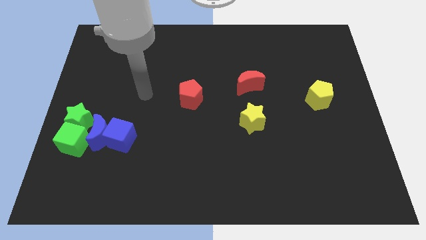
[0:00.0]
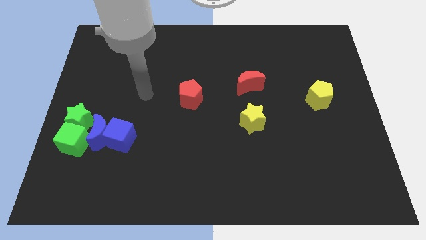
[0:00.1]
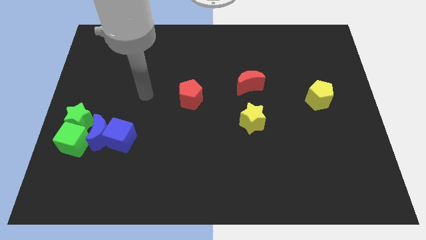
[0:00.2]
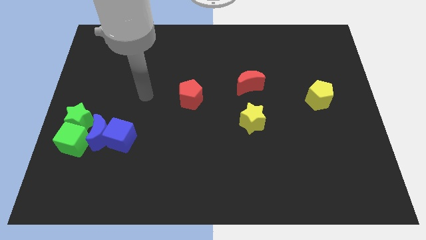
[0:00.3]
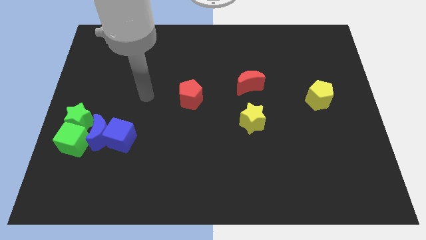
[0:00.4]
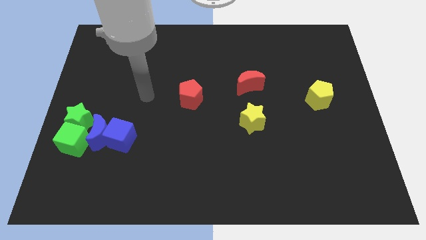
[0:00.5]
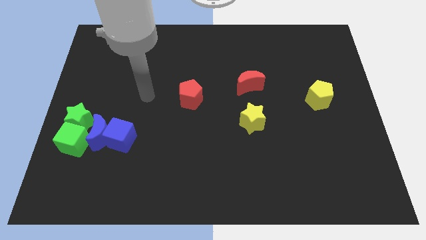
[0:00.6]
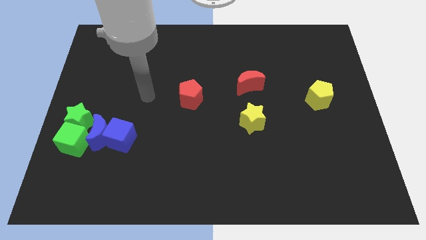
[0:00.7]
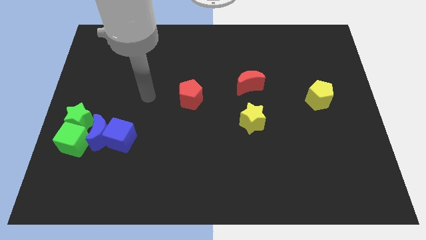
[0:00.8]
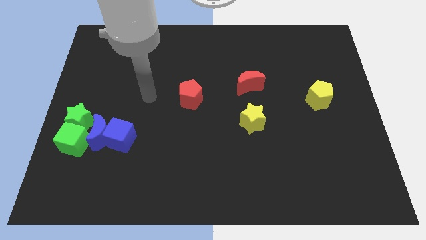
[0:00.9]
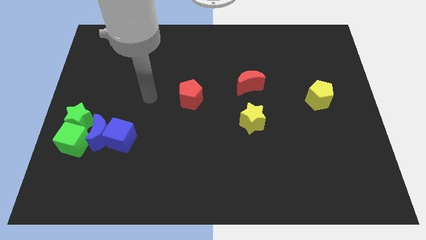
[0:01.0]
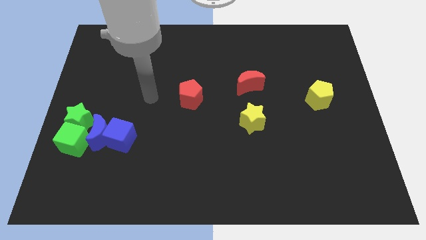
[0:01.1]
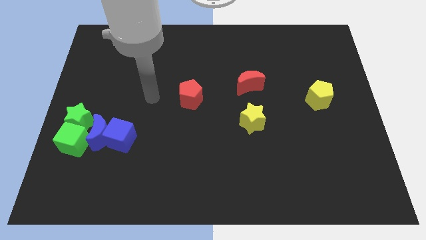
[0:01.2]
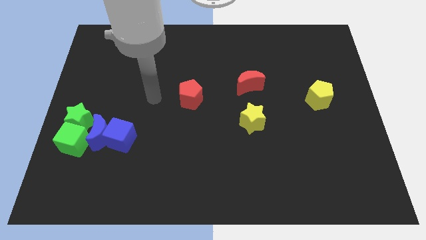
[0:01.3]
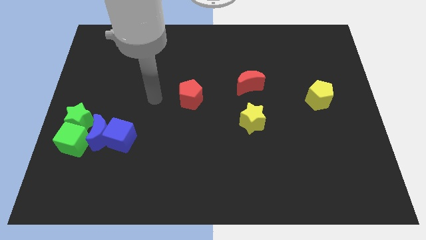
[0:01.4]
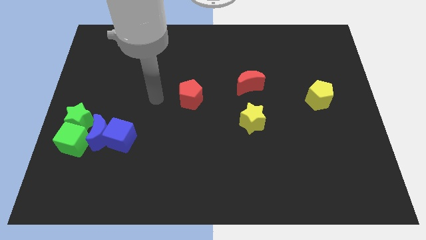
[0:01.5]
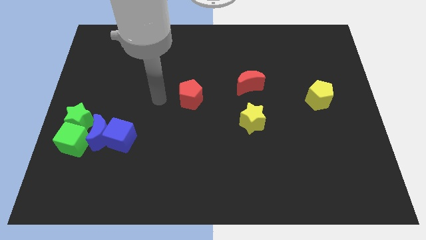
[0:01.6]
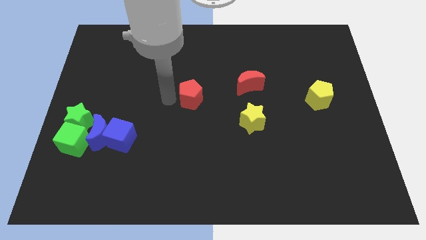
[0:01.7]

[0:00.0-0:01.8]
move your arm towards the left of the red pentagon

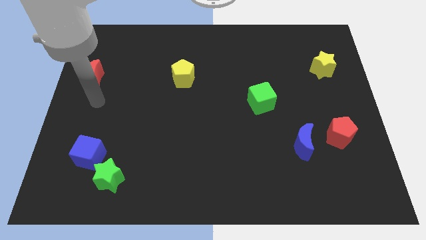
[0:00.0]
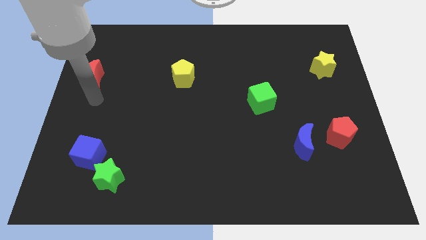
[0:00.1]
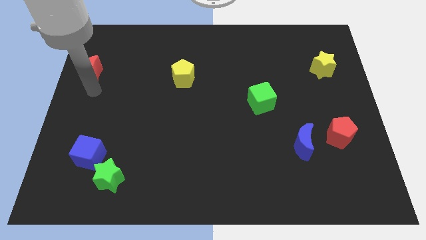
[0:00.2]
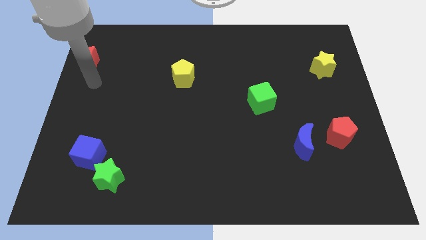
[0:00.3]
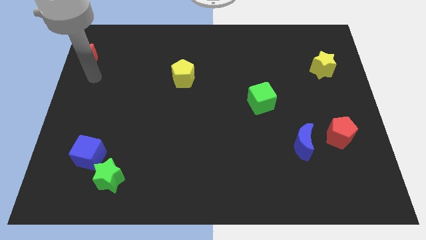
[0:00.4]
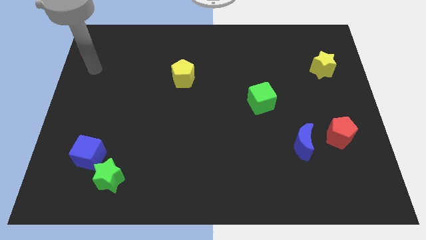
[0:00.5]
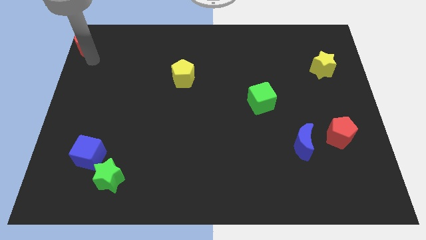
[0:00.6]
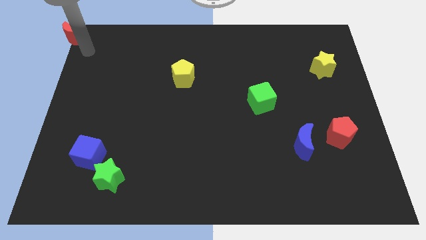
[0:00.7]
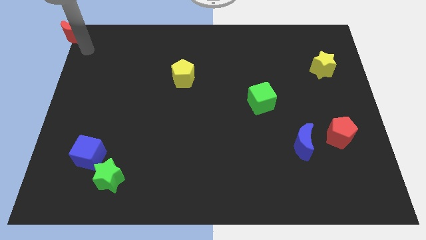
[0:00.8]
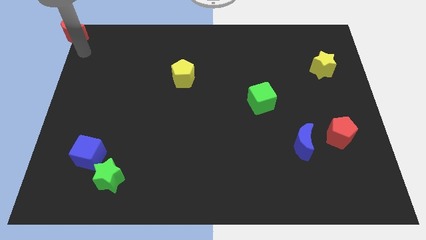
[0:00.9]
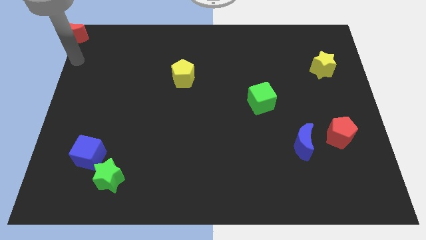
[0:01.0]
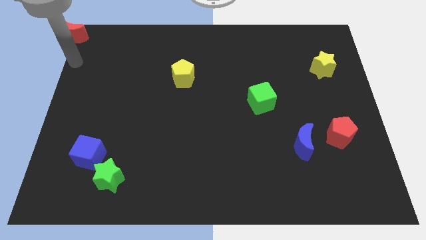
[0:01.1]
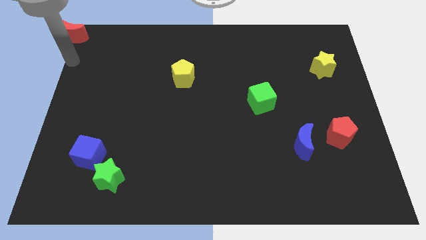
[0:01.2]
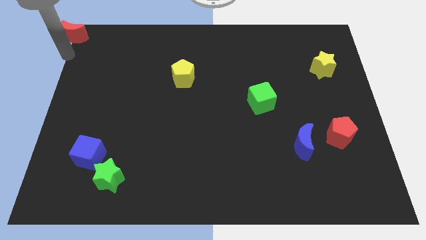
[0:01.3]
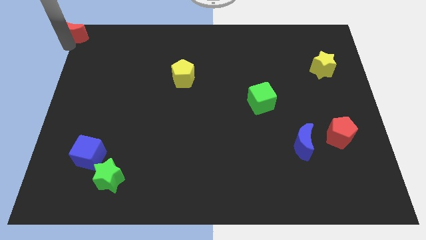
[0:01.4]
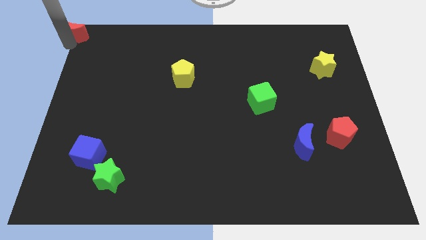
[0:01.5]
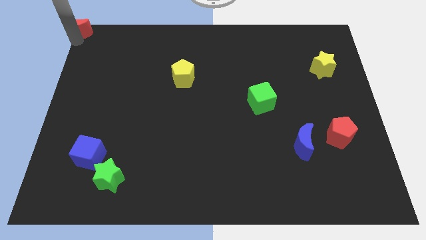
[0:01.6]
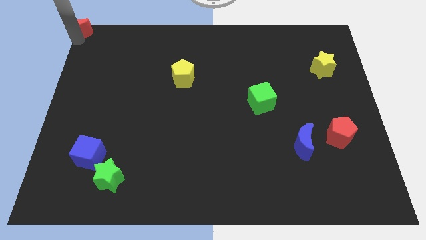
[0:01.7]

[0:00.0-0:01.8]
push the red crescent to the top left to the board

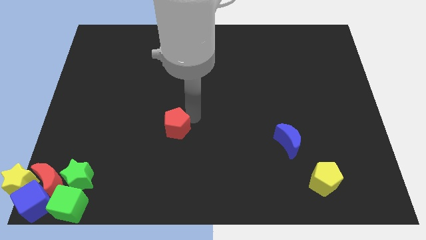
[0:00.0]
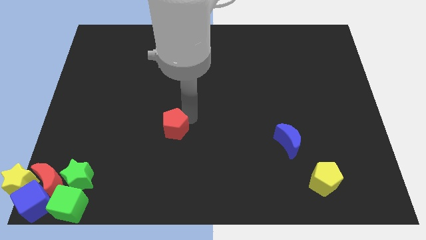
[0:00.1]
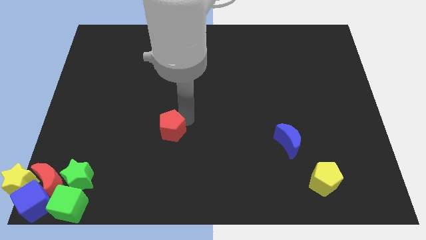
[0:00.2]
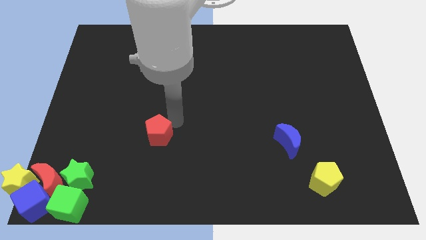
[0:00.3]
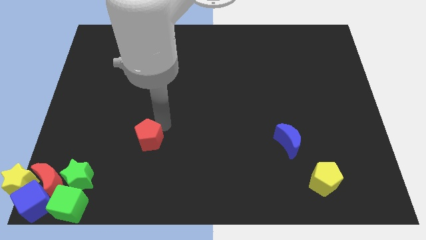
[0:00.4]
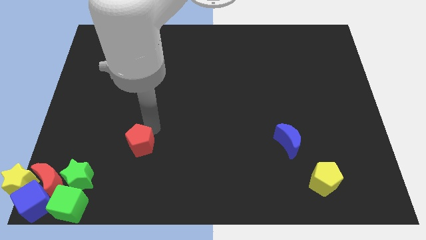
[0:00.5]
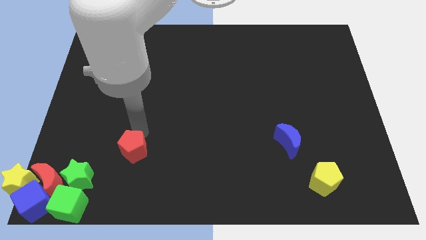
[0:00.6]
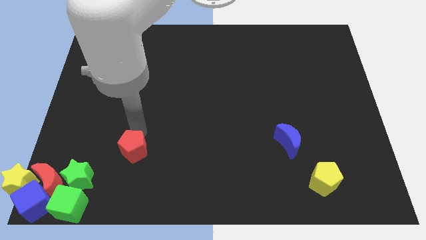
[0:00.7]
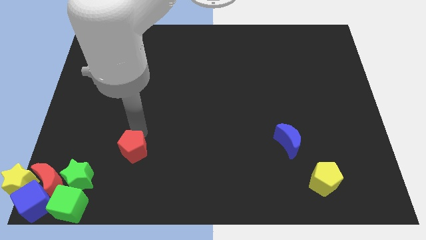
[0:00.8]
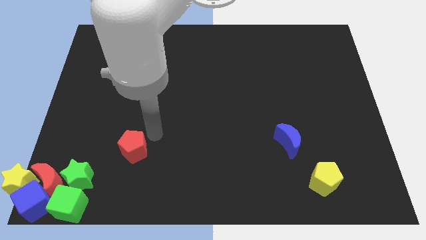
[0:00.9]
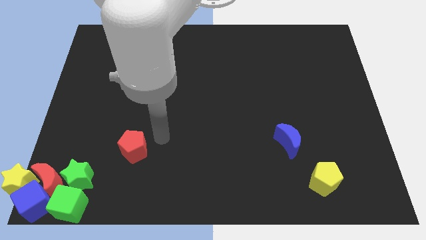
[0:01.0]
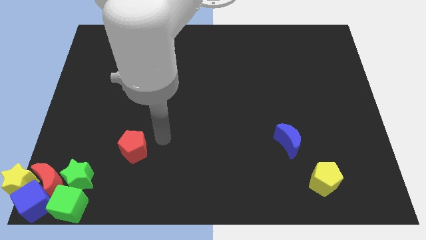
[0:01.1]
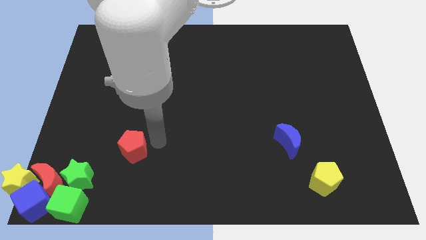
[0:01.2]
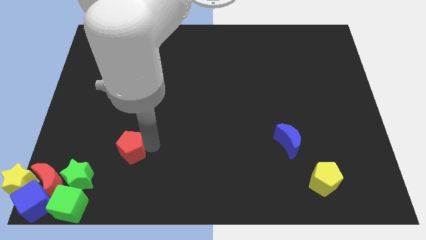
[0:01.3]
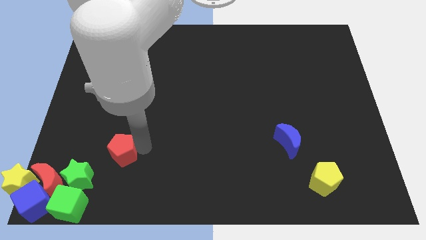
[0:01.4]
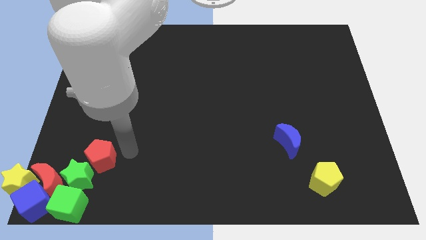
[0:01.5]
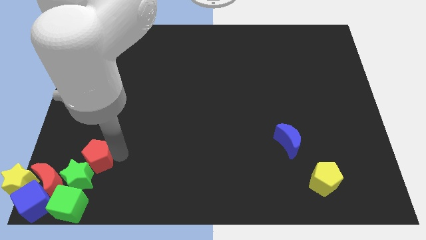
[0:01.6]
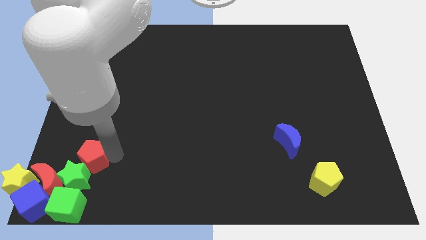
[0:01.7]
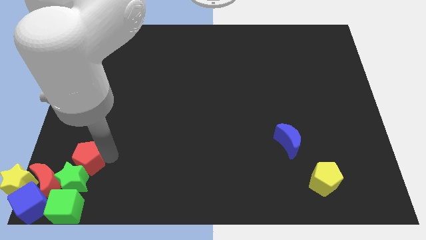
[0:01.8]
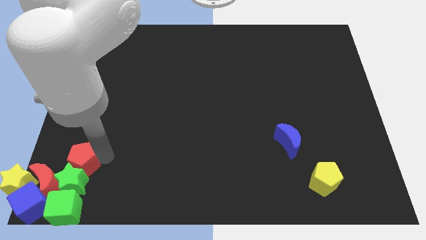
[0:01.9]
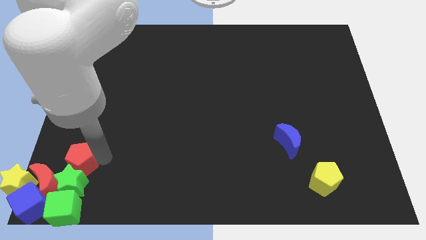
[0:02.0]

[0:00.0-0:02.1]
move the red pentagon into the green star

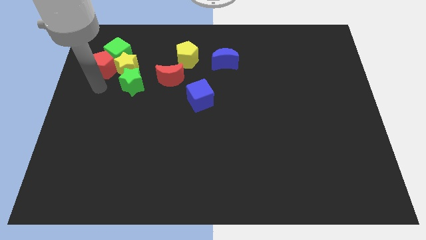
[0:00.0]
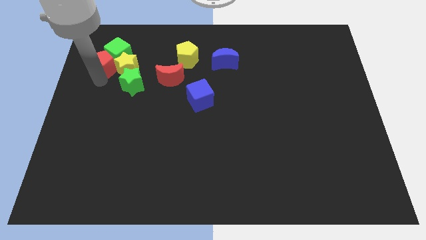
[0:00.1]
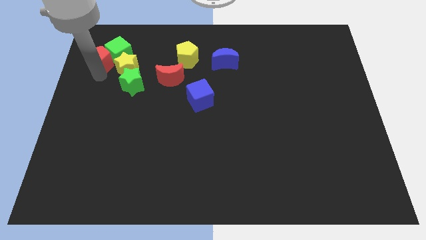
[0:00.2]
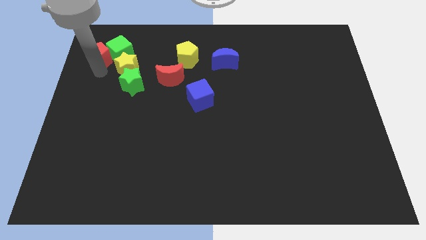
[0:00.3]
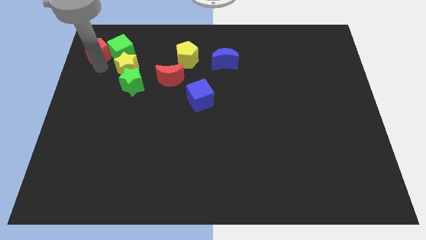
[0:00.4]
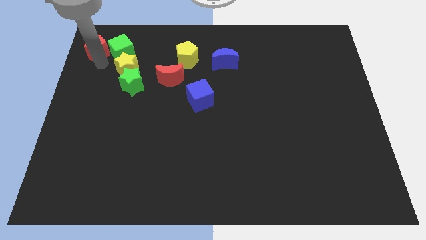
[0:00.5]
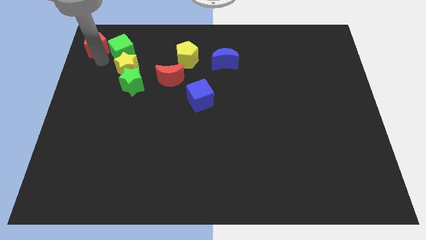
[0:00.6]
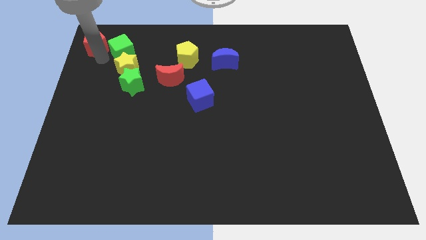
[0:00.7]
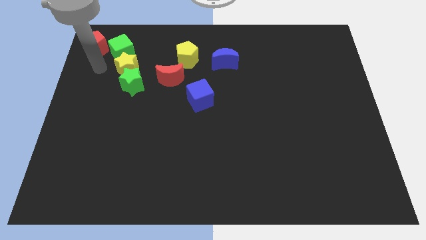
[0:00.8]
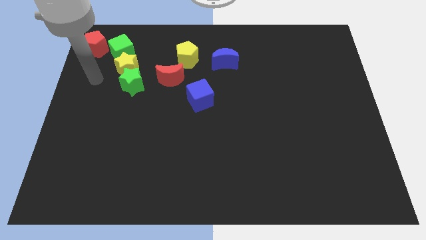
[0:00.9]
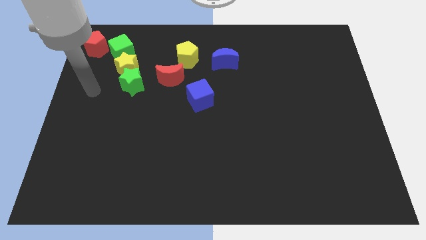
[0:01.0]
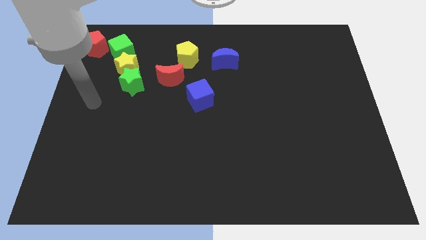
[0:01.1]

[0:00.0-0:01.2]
move the red pentagon to the top left corner of the board

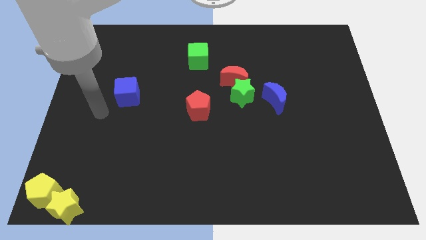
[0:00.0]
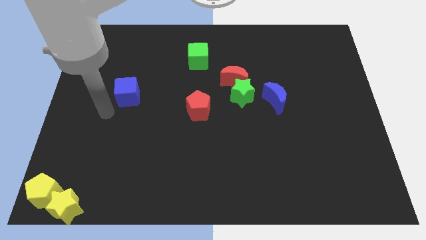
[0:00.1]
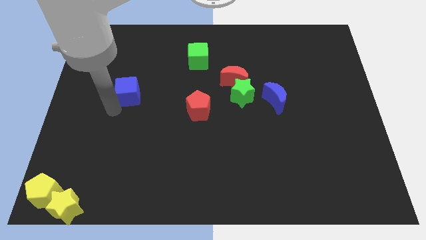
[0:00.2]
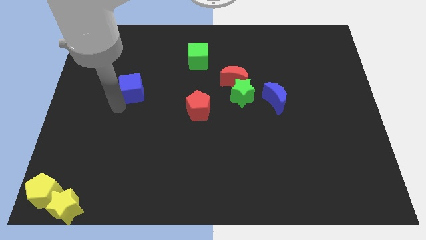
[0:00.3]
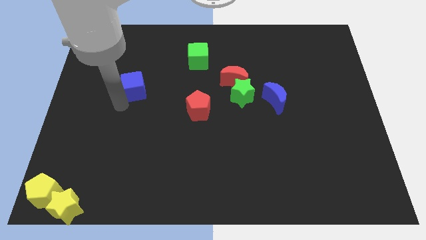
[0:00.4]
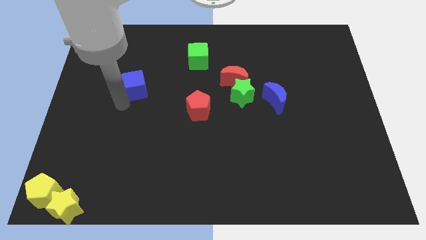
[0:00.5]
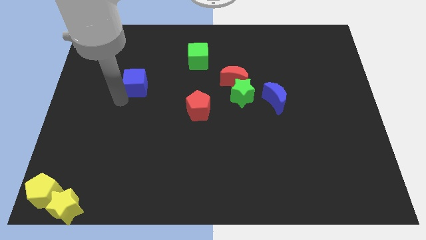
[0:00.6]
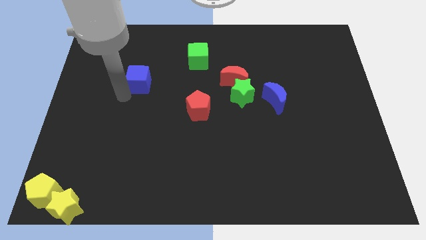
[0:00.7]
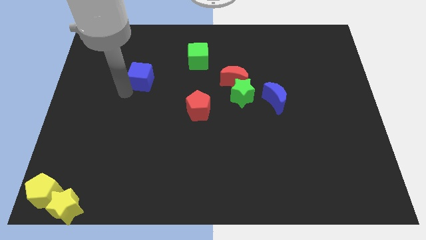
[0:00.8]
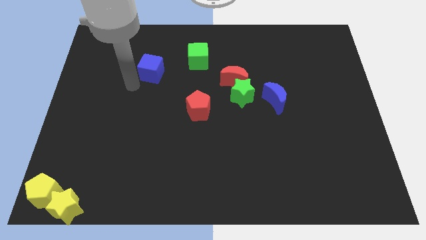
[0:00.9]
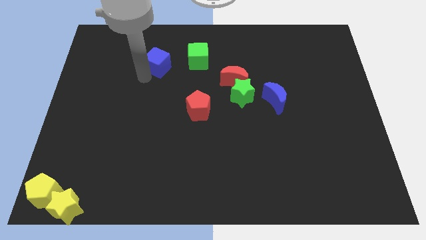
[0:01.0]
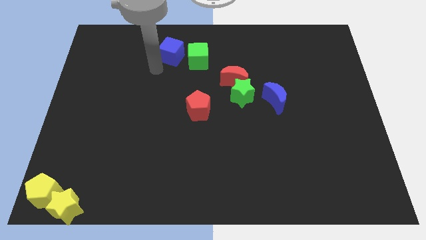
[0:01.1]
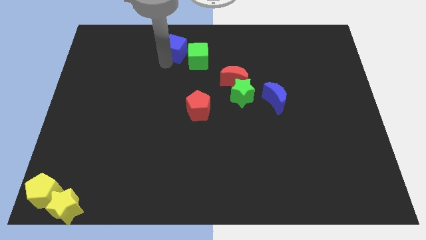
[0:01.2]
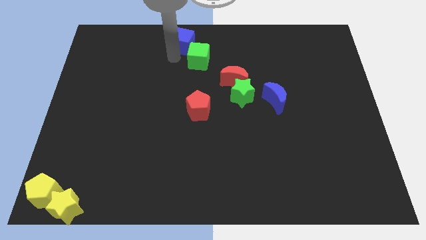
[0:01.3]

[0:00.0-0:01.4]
push the blue cube close to the green cube

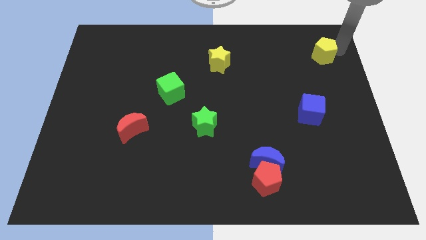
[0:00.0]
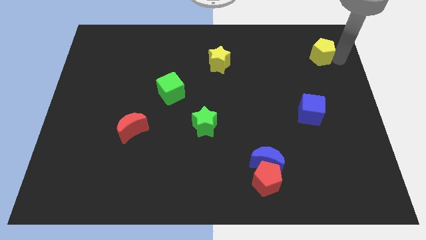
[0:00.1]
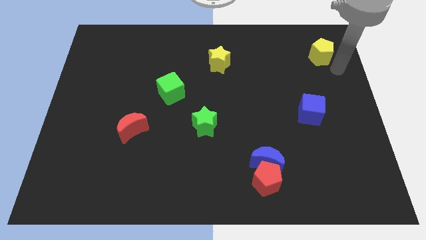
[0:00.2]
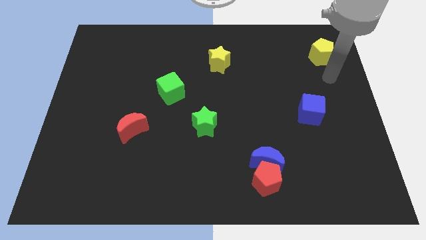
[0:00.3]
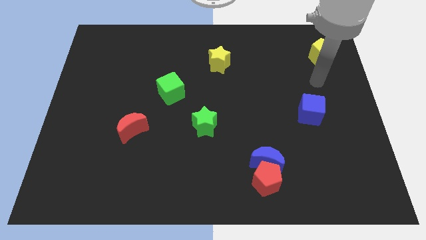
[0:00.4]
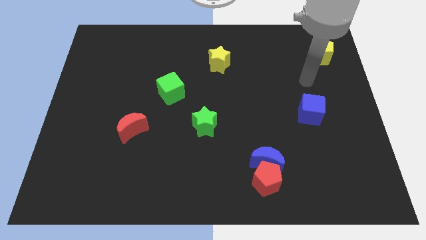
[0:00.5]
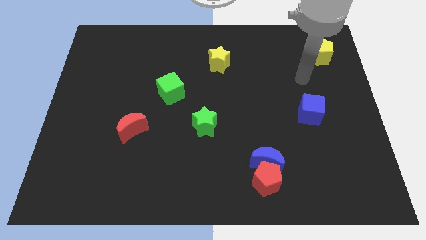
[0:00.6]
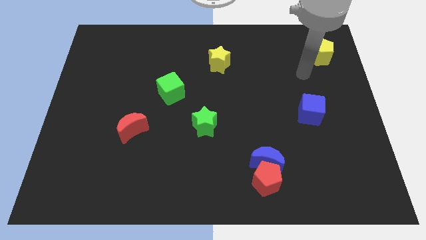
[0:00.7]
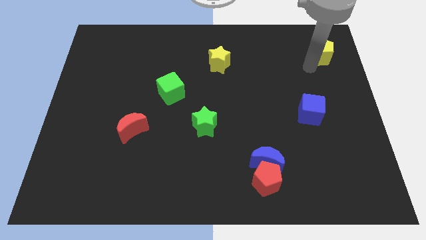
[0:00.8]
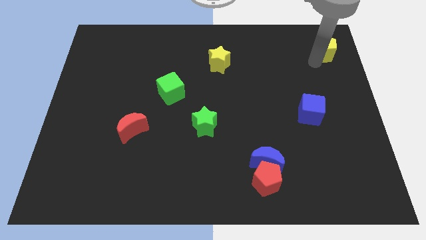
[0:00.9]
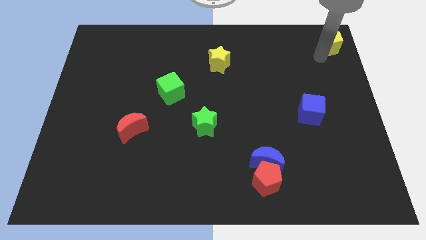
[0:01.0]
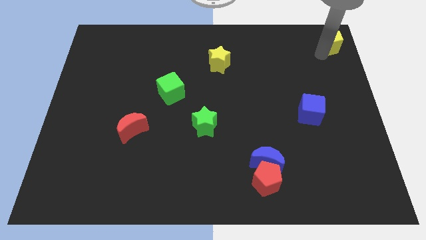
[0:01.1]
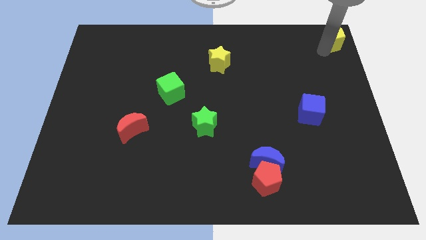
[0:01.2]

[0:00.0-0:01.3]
push the yellow pentagon towards the top right corner of the board
